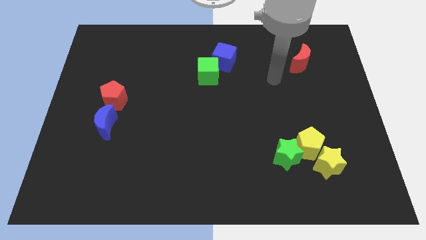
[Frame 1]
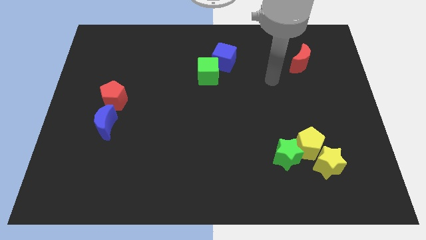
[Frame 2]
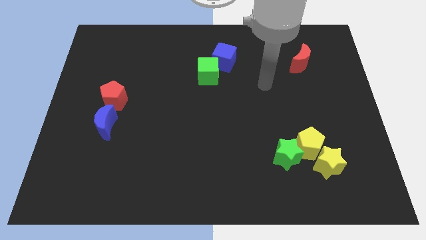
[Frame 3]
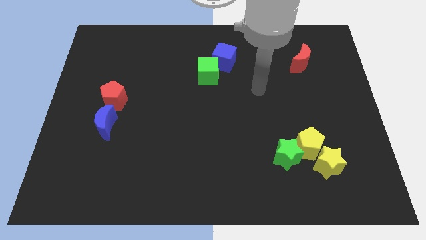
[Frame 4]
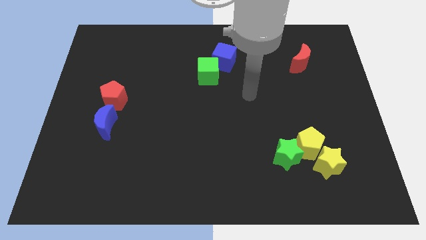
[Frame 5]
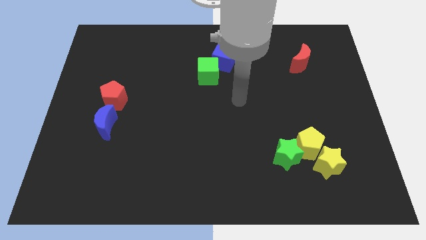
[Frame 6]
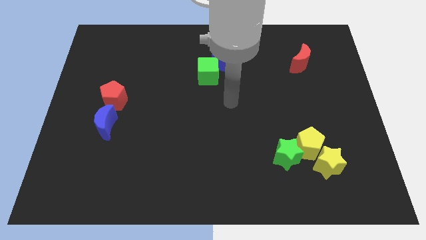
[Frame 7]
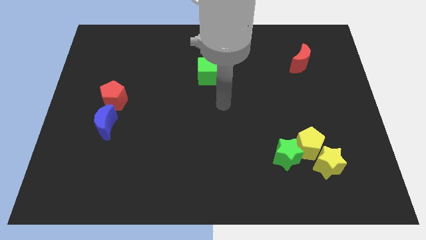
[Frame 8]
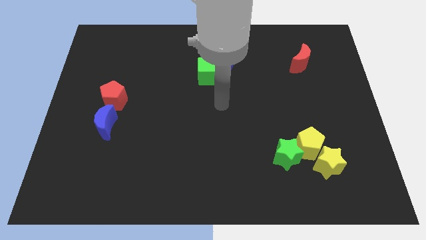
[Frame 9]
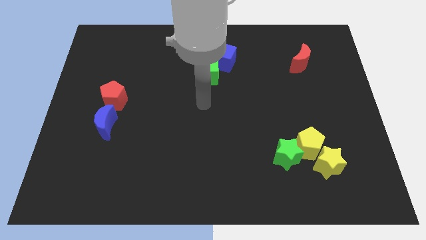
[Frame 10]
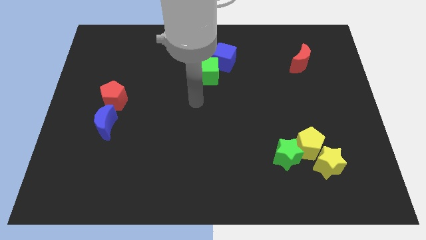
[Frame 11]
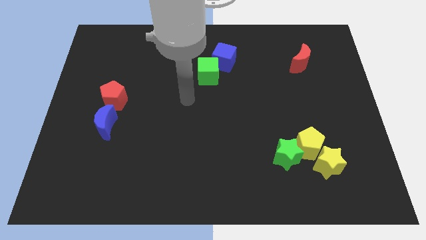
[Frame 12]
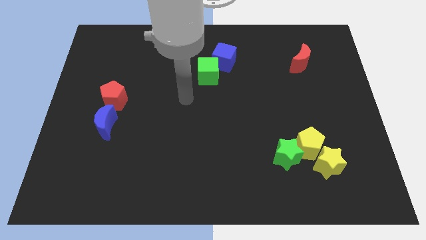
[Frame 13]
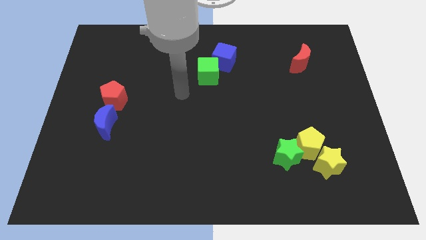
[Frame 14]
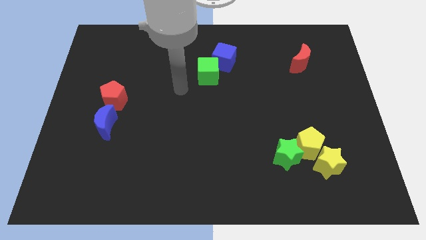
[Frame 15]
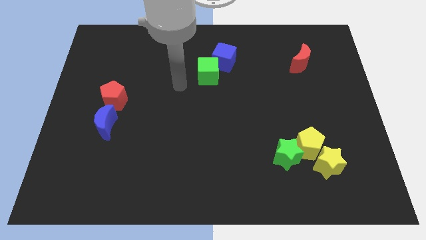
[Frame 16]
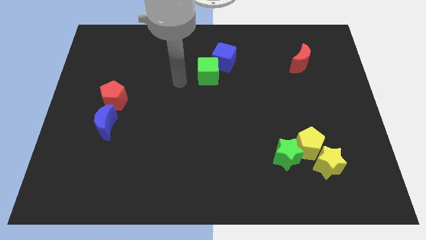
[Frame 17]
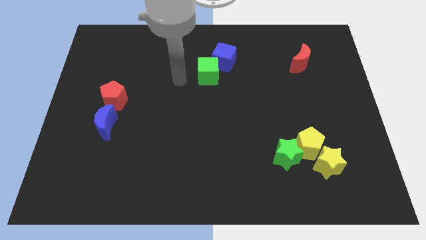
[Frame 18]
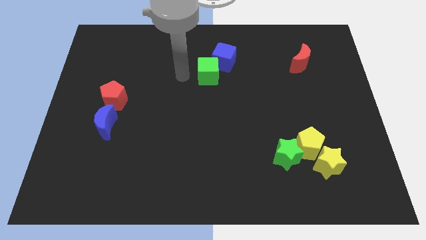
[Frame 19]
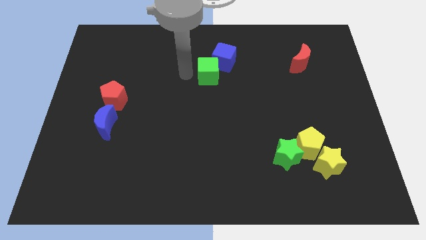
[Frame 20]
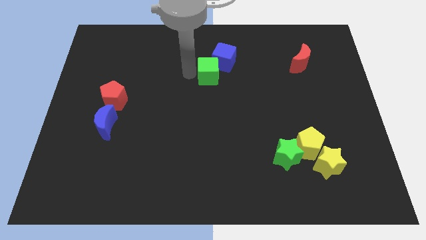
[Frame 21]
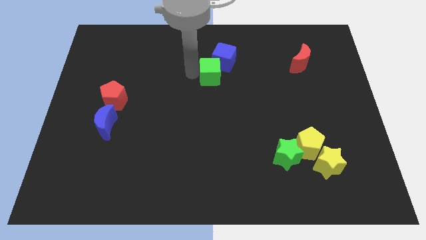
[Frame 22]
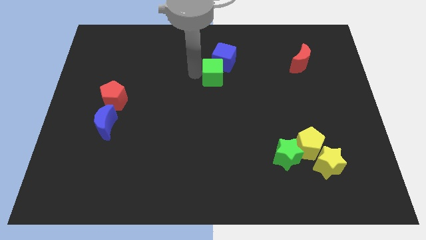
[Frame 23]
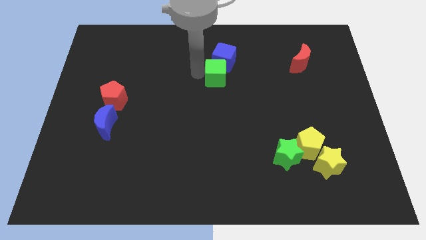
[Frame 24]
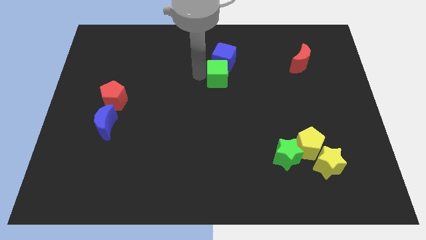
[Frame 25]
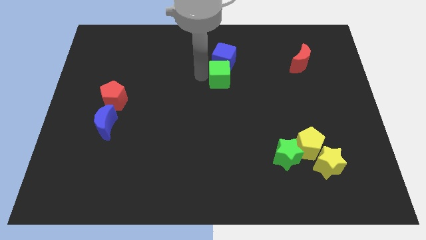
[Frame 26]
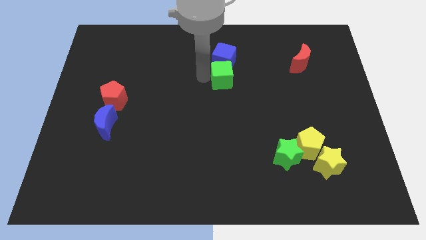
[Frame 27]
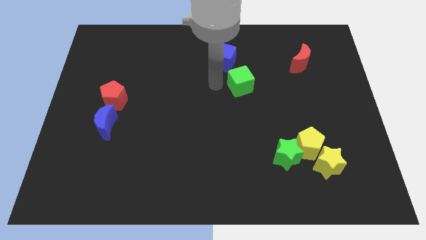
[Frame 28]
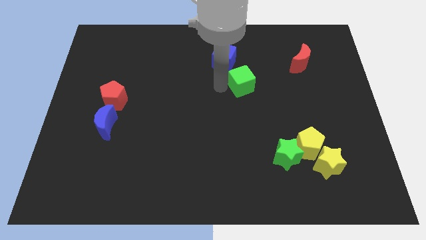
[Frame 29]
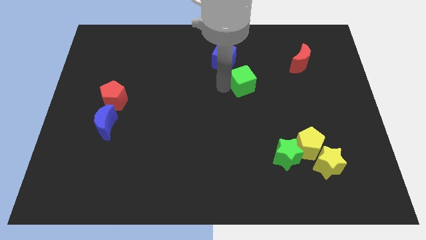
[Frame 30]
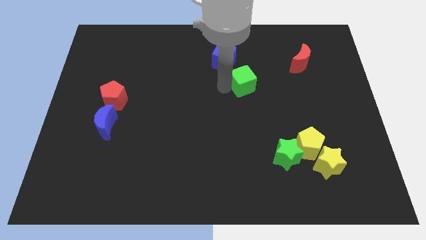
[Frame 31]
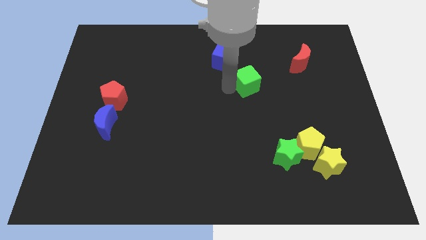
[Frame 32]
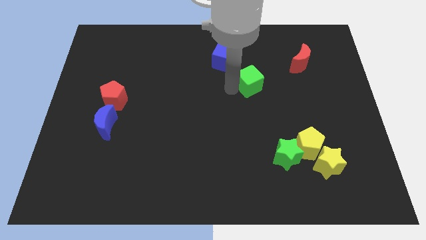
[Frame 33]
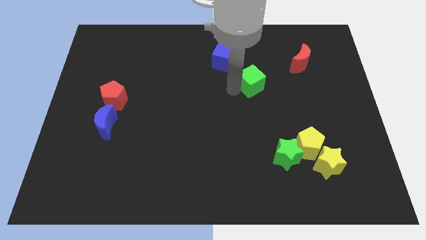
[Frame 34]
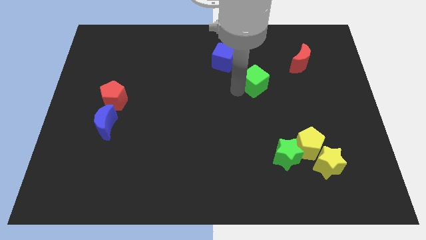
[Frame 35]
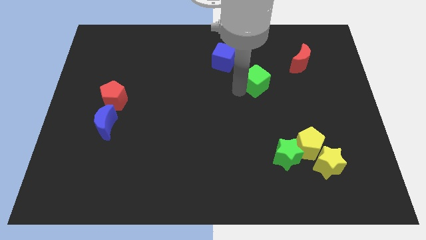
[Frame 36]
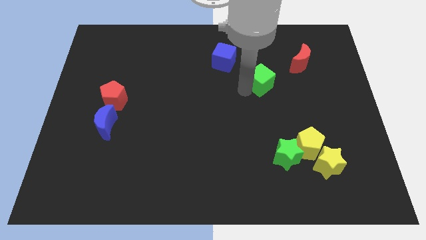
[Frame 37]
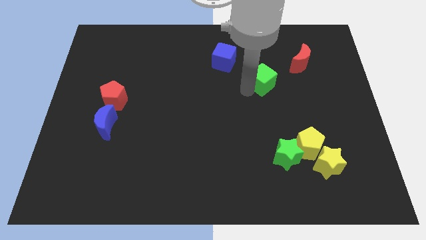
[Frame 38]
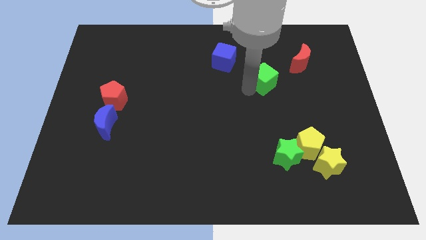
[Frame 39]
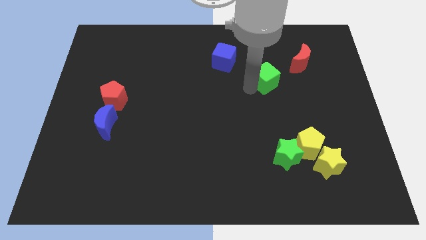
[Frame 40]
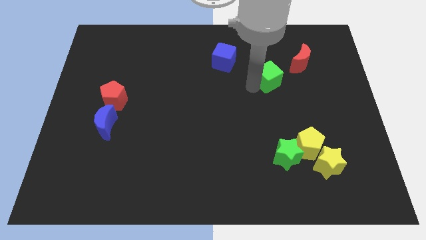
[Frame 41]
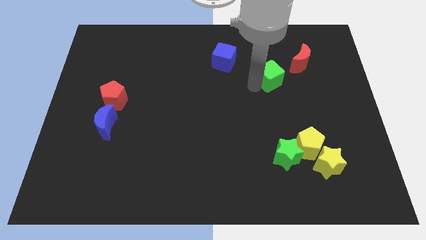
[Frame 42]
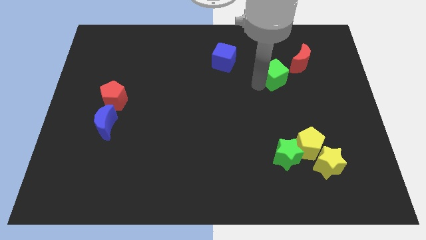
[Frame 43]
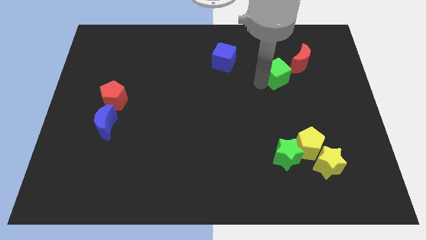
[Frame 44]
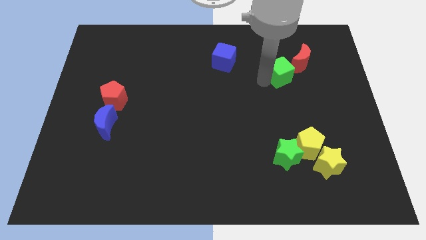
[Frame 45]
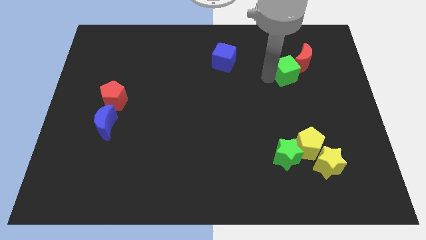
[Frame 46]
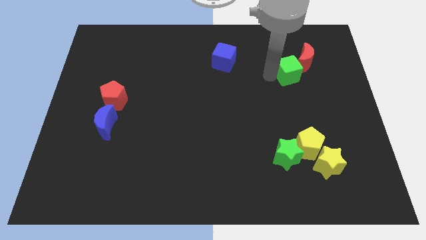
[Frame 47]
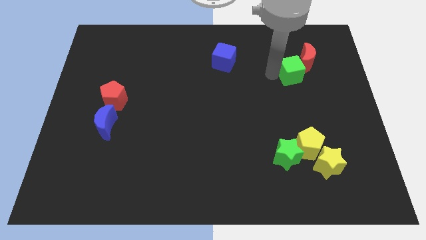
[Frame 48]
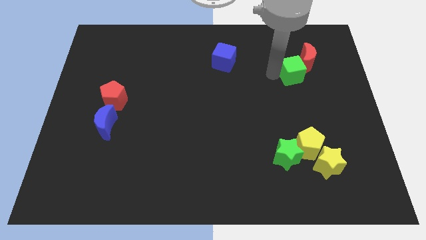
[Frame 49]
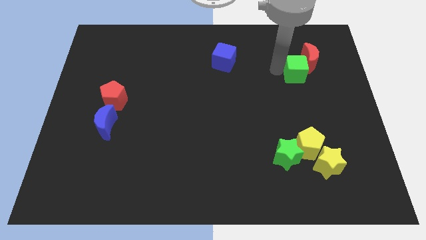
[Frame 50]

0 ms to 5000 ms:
slide the green cube close to the red moon

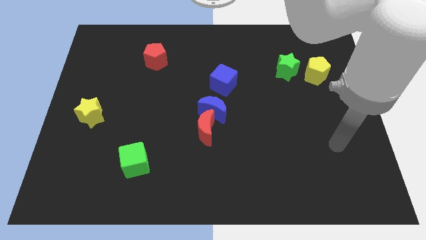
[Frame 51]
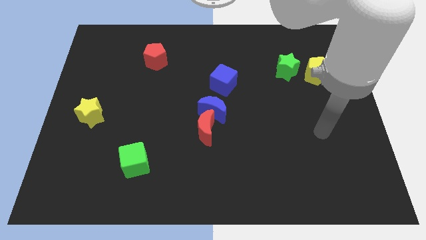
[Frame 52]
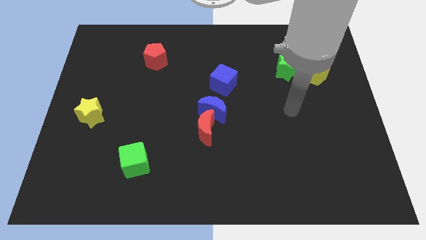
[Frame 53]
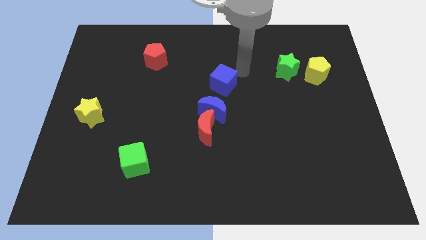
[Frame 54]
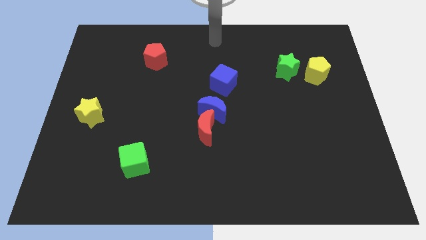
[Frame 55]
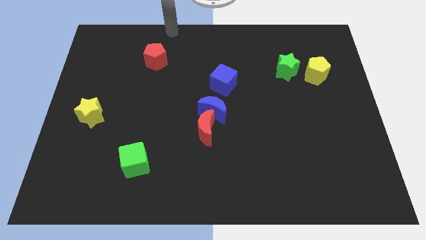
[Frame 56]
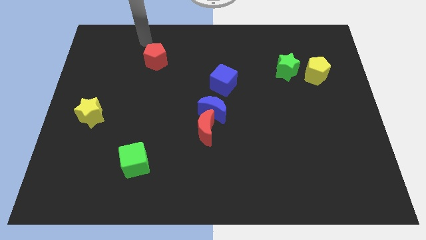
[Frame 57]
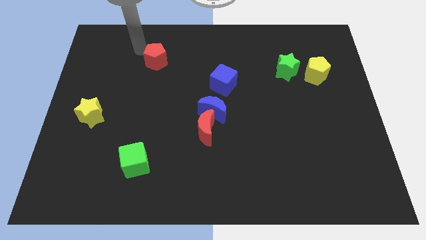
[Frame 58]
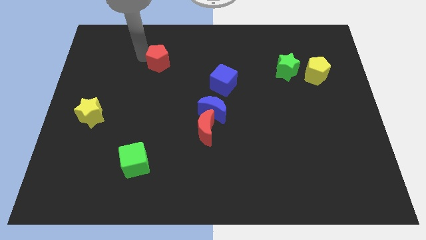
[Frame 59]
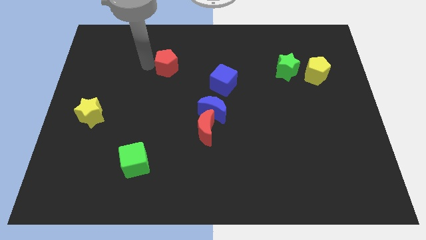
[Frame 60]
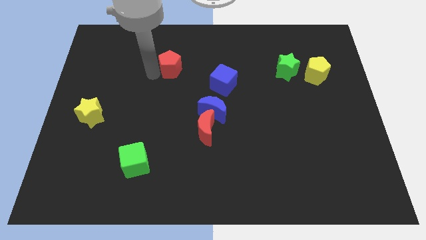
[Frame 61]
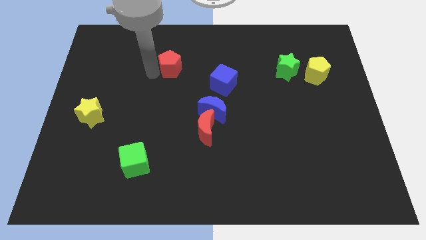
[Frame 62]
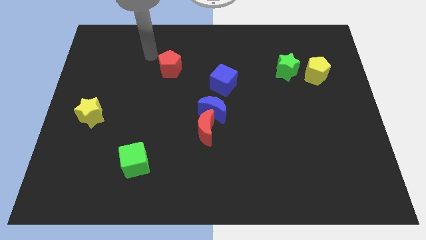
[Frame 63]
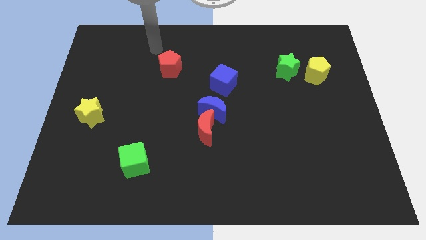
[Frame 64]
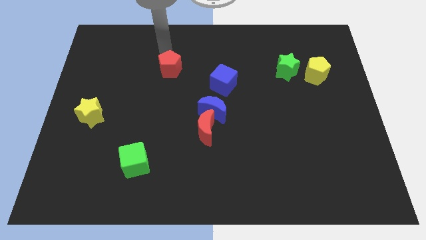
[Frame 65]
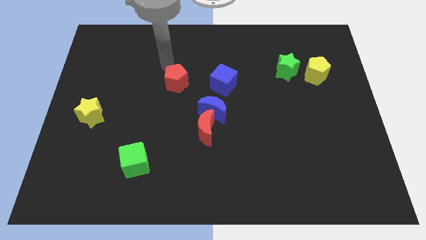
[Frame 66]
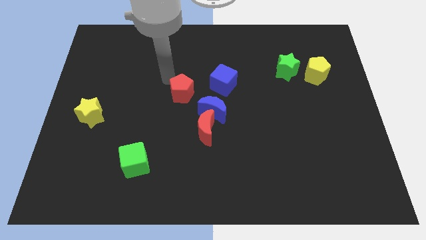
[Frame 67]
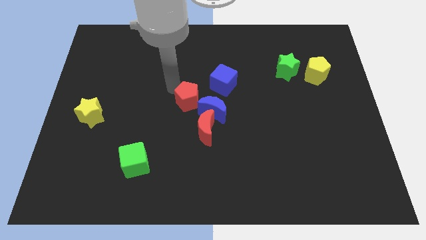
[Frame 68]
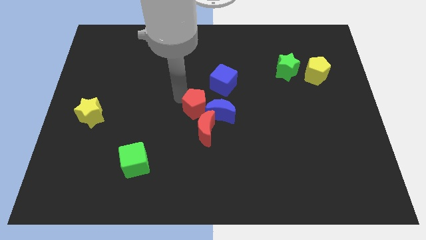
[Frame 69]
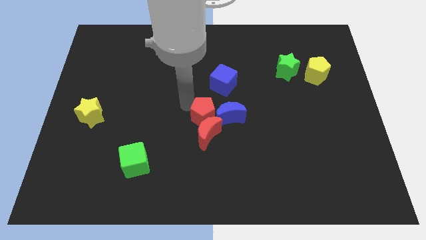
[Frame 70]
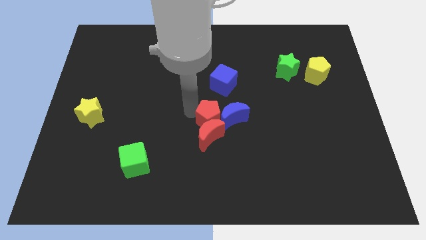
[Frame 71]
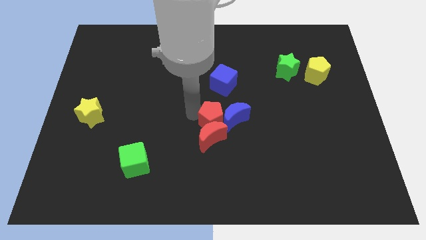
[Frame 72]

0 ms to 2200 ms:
put the red pentagon to the red moon

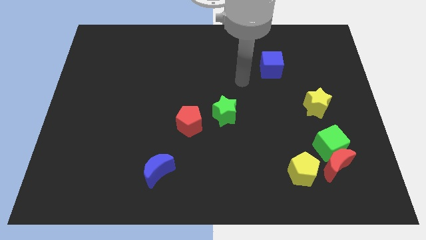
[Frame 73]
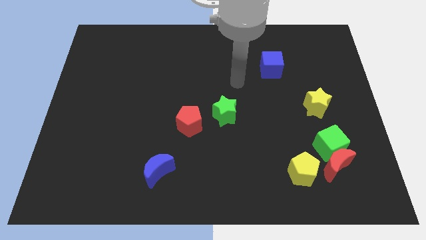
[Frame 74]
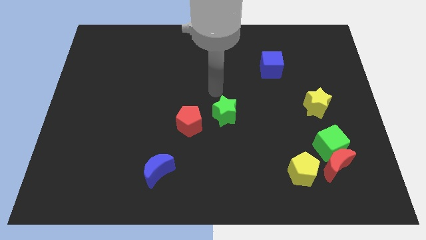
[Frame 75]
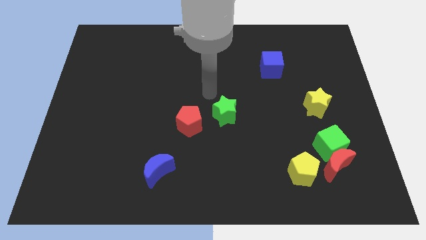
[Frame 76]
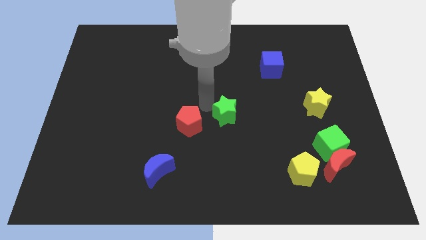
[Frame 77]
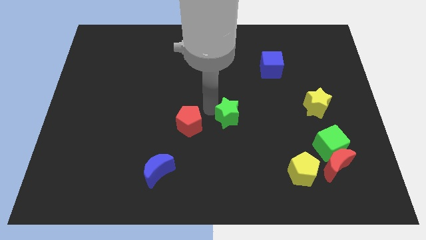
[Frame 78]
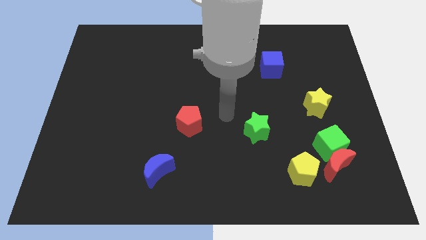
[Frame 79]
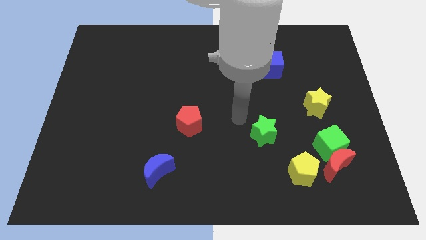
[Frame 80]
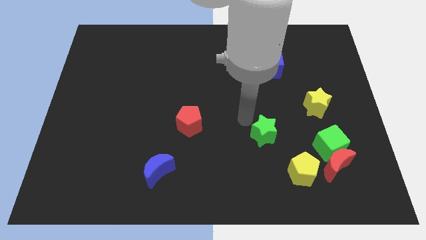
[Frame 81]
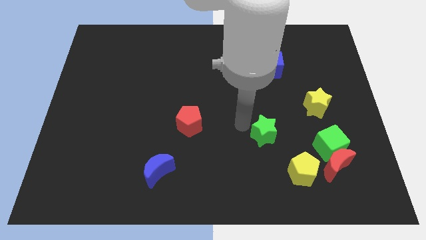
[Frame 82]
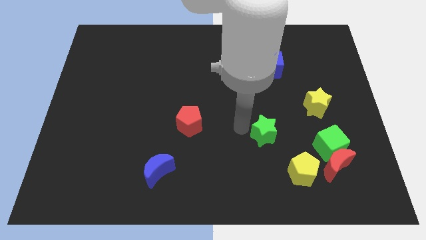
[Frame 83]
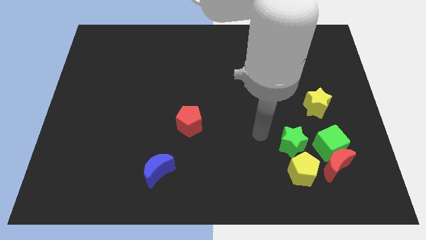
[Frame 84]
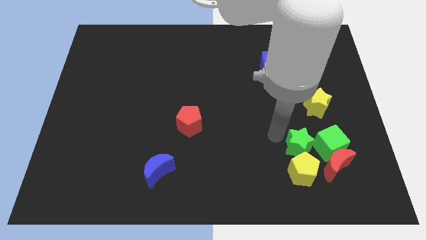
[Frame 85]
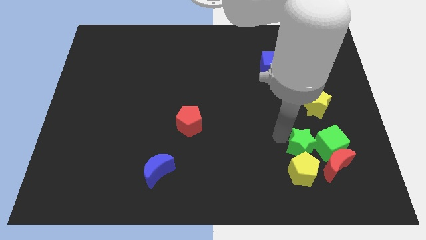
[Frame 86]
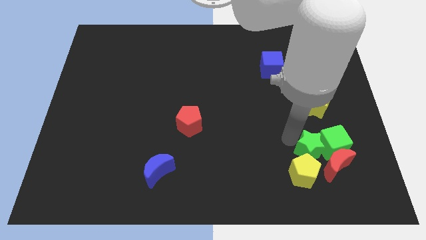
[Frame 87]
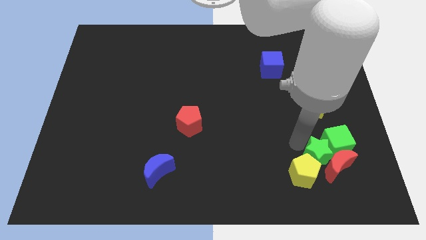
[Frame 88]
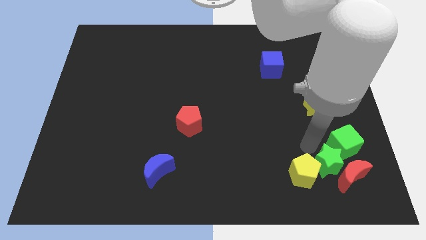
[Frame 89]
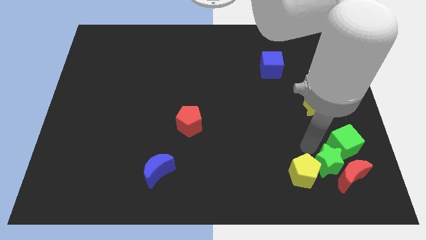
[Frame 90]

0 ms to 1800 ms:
move the green star next to the red moon
